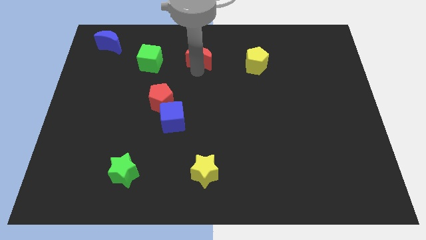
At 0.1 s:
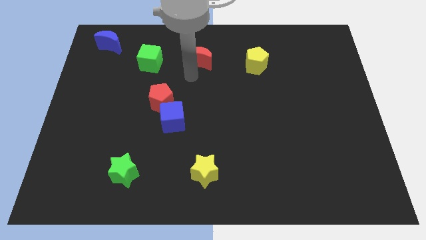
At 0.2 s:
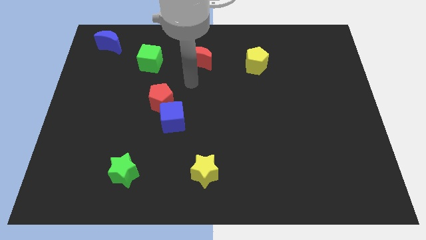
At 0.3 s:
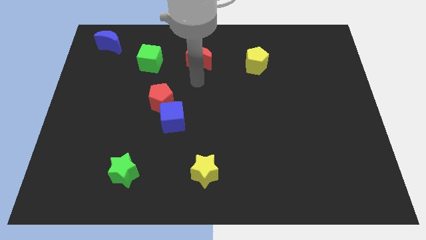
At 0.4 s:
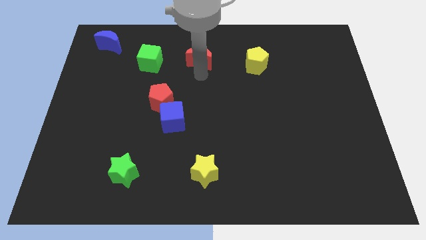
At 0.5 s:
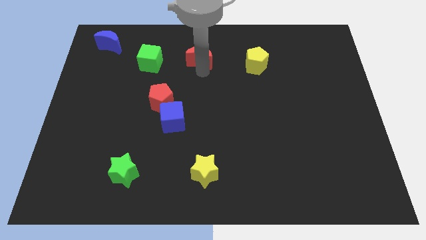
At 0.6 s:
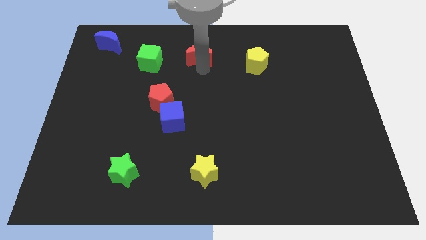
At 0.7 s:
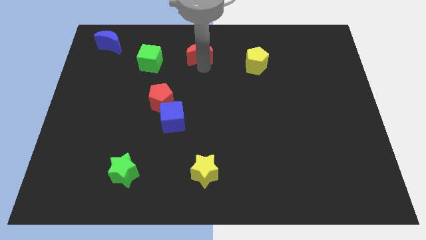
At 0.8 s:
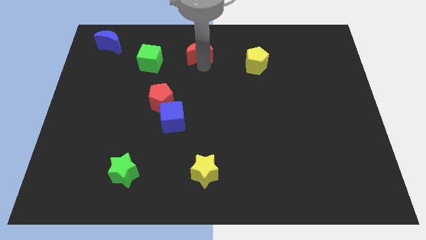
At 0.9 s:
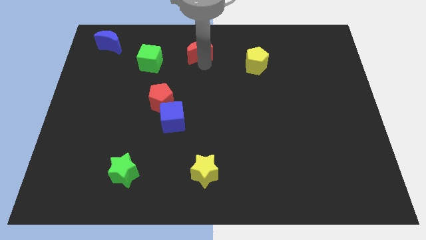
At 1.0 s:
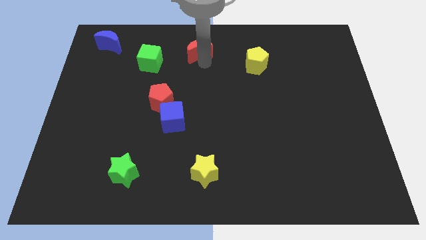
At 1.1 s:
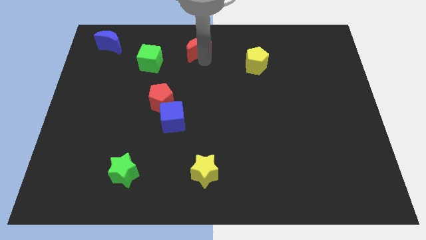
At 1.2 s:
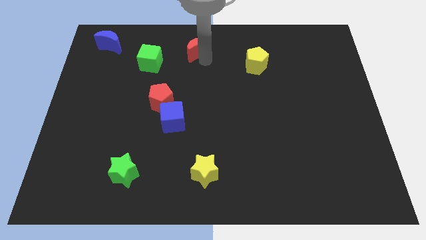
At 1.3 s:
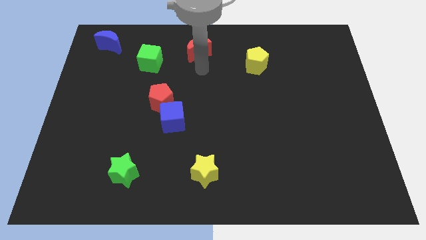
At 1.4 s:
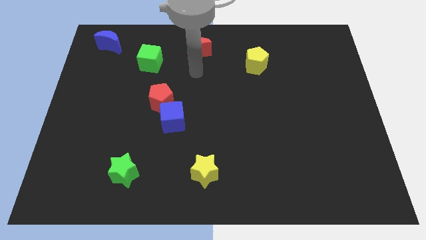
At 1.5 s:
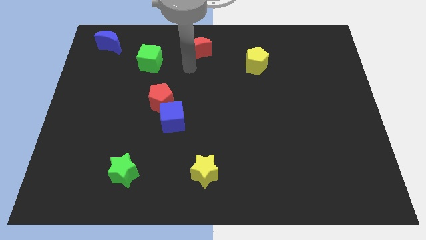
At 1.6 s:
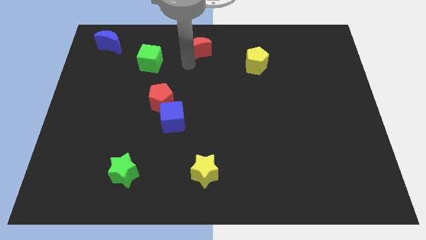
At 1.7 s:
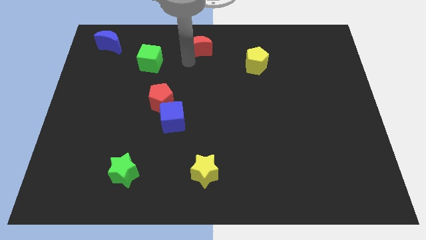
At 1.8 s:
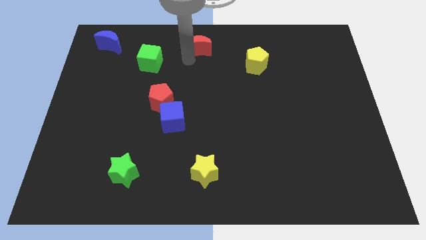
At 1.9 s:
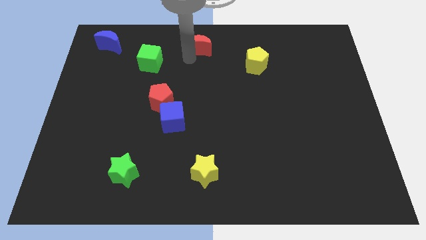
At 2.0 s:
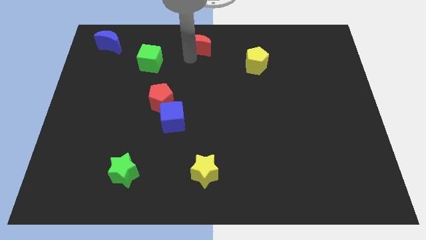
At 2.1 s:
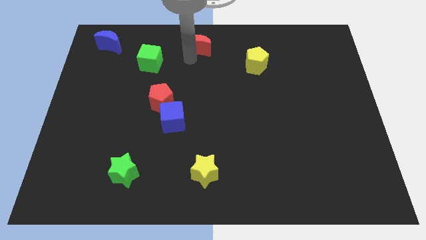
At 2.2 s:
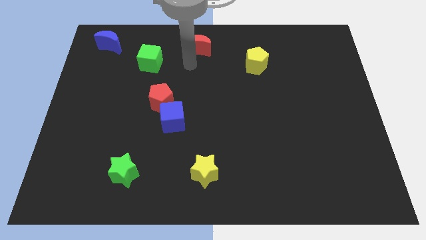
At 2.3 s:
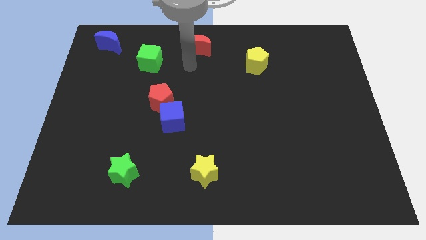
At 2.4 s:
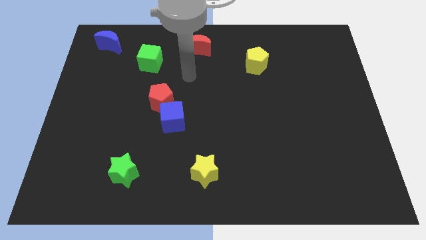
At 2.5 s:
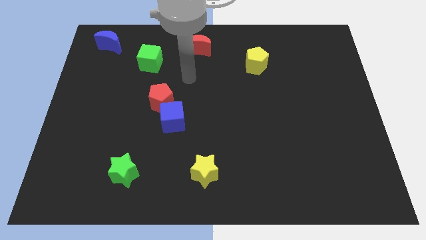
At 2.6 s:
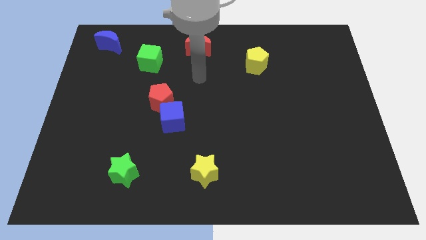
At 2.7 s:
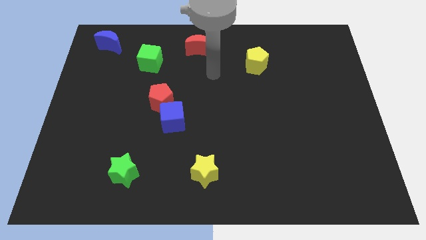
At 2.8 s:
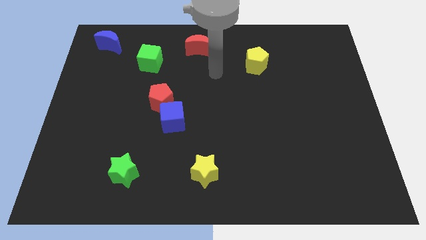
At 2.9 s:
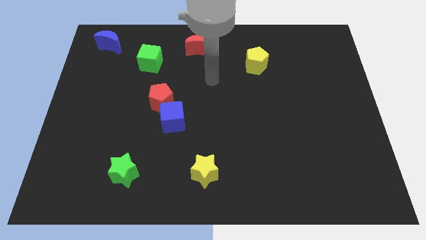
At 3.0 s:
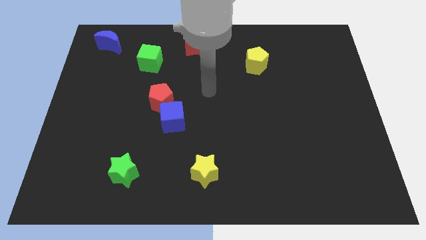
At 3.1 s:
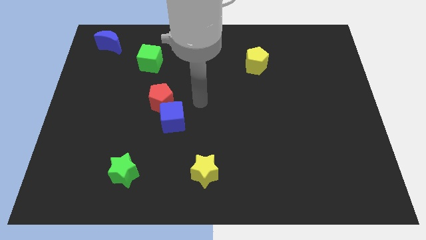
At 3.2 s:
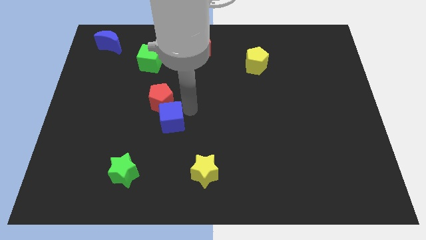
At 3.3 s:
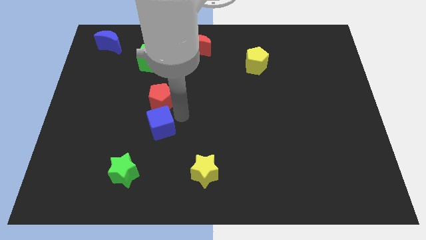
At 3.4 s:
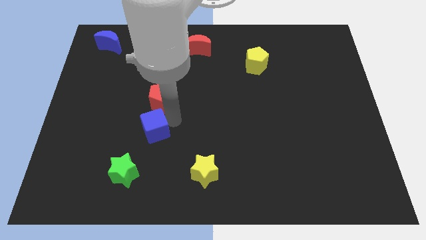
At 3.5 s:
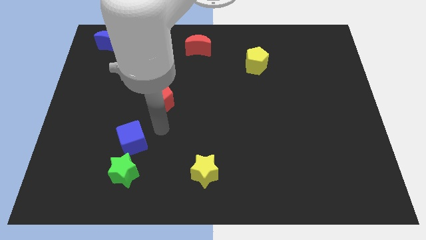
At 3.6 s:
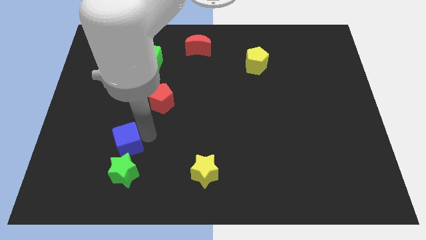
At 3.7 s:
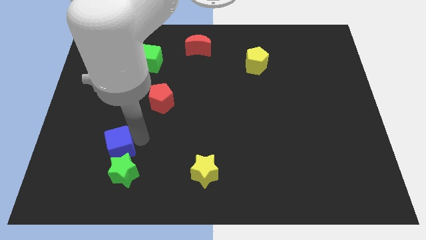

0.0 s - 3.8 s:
move the red crescent to the top center of the board

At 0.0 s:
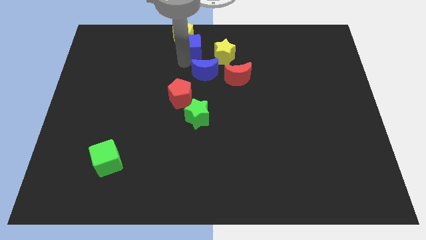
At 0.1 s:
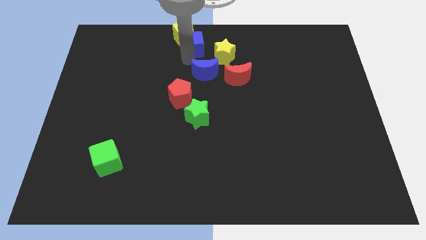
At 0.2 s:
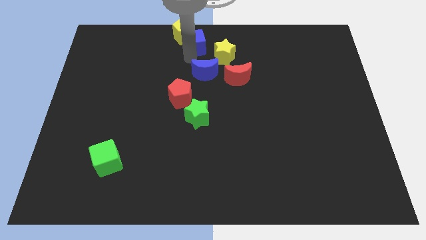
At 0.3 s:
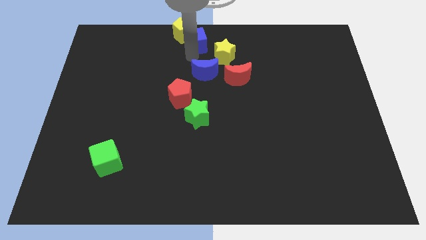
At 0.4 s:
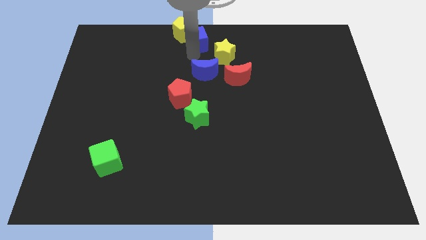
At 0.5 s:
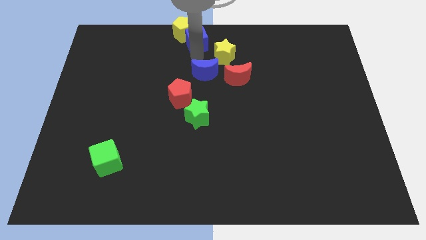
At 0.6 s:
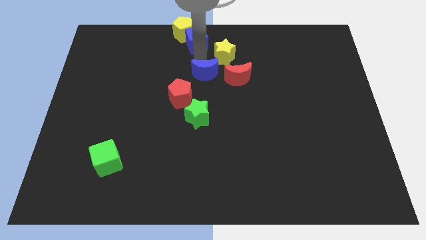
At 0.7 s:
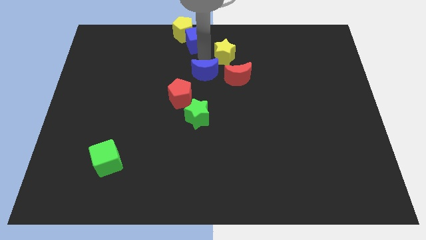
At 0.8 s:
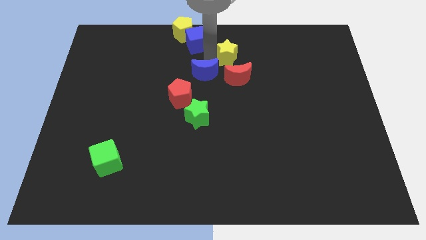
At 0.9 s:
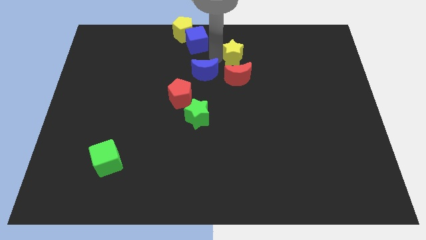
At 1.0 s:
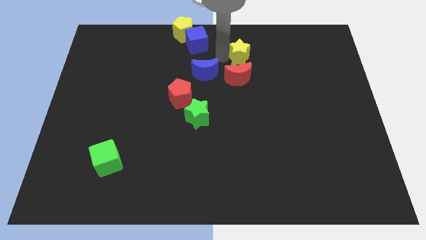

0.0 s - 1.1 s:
push the yellow star slightly to the right

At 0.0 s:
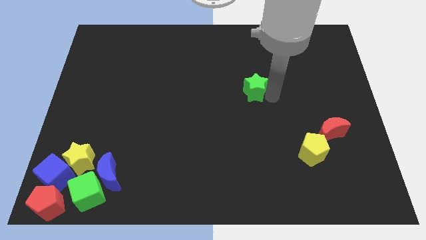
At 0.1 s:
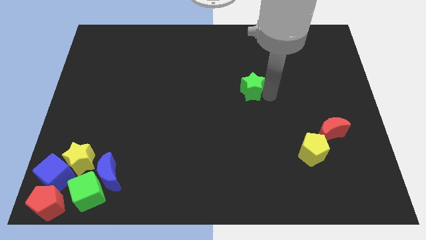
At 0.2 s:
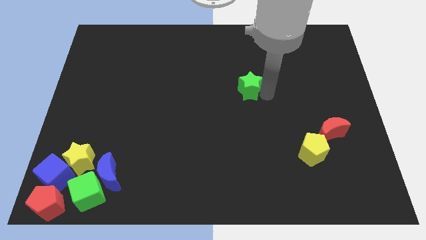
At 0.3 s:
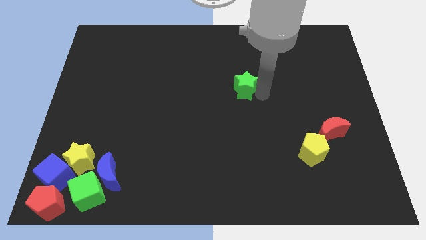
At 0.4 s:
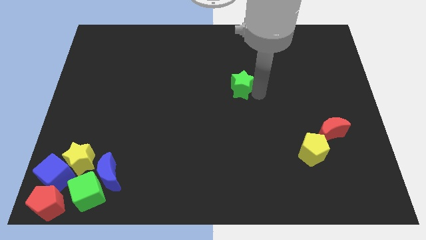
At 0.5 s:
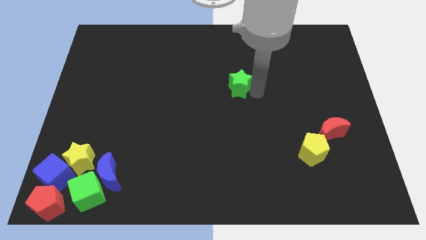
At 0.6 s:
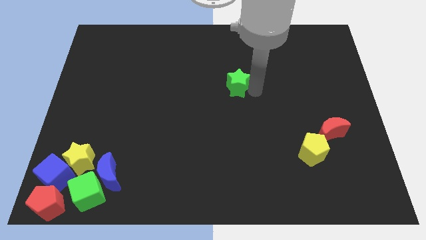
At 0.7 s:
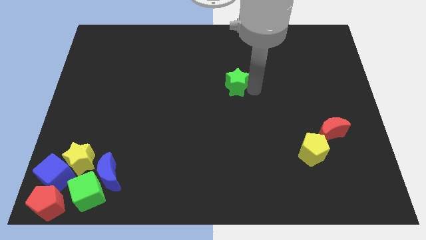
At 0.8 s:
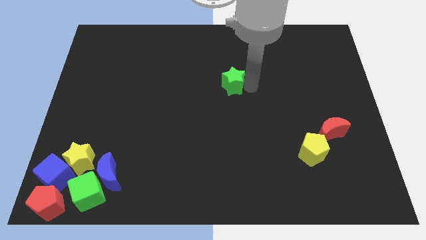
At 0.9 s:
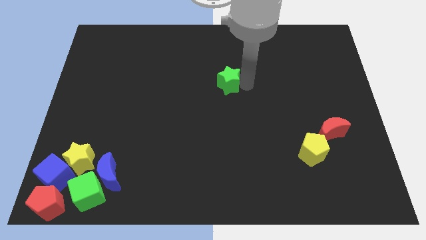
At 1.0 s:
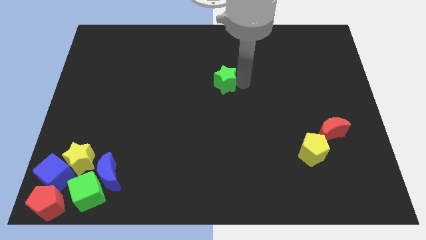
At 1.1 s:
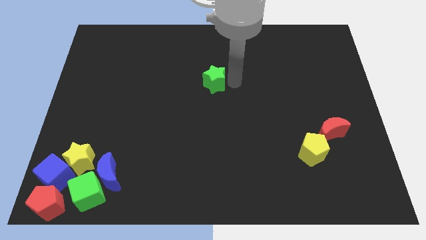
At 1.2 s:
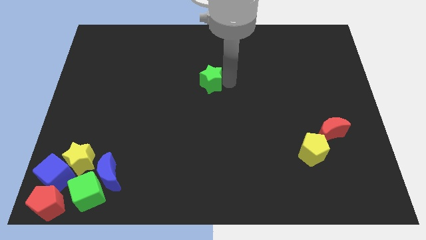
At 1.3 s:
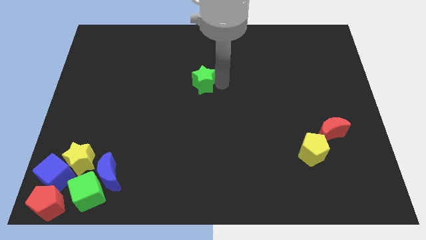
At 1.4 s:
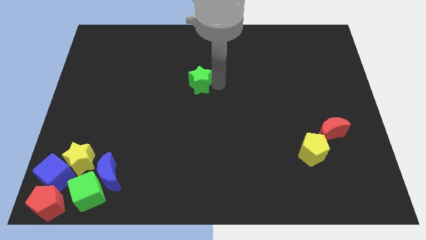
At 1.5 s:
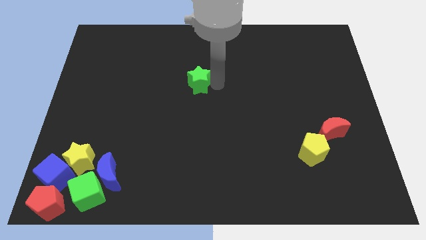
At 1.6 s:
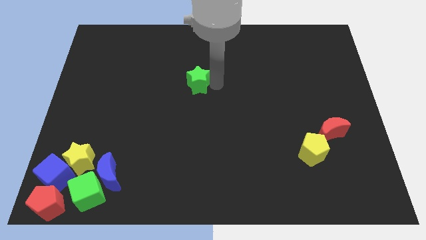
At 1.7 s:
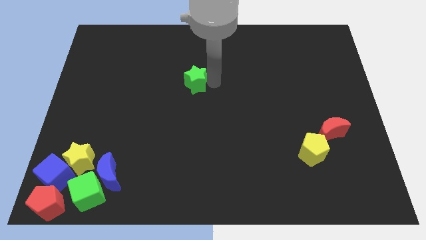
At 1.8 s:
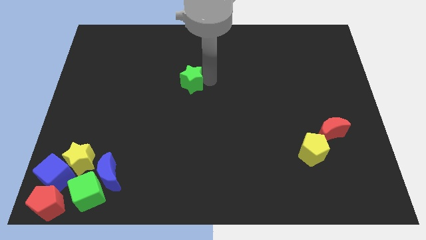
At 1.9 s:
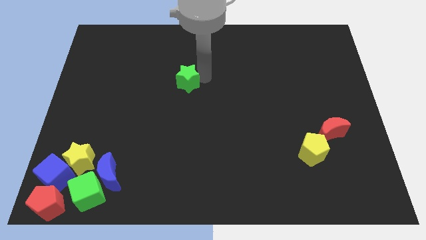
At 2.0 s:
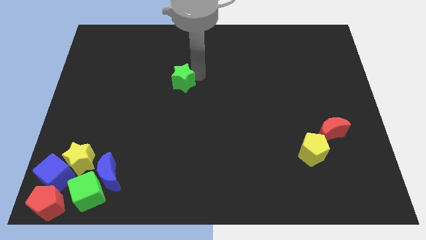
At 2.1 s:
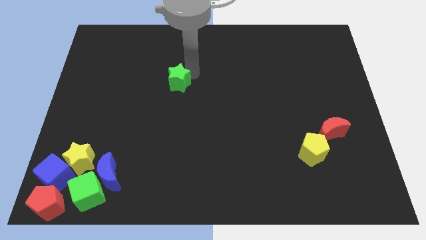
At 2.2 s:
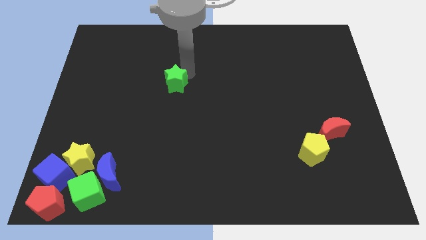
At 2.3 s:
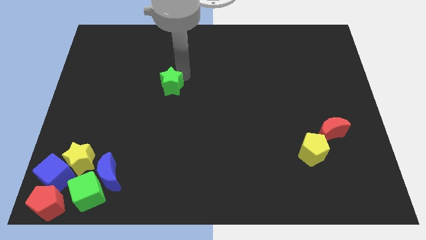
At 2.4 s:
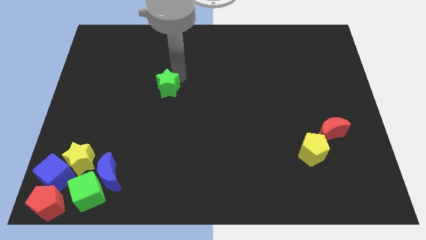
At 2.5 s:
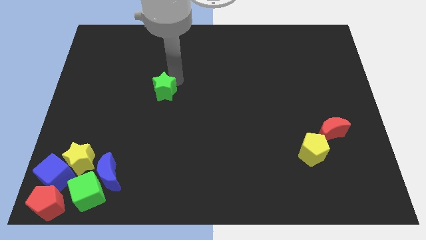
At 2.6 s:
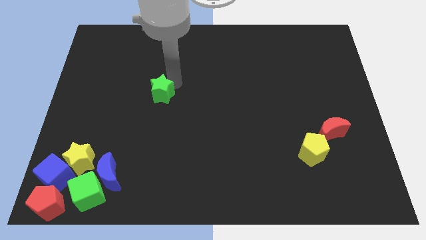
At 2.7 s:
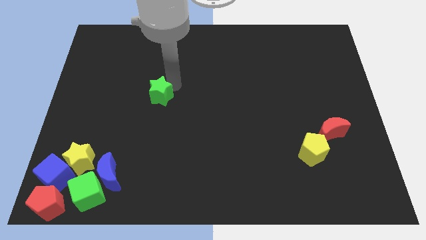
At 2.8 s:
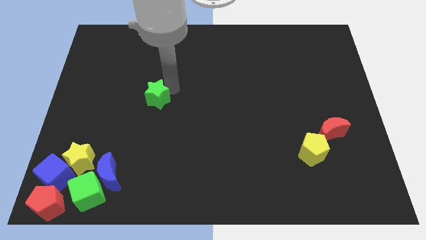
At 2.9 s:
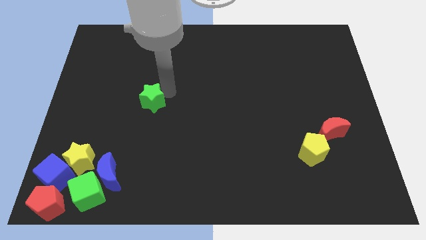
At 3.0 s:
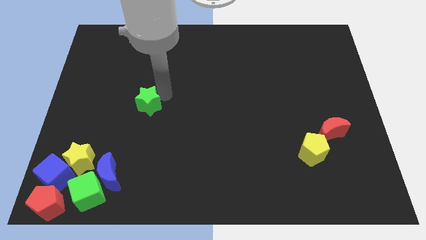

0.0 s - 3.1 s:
slide the green star to the left

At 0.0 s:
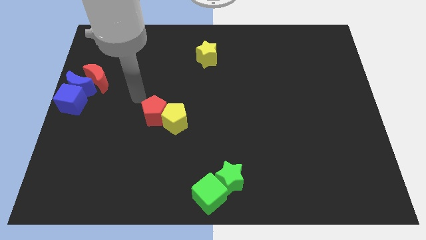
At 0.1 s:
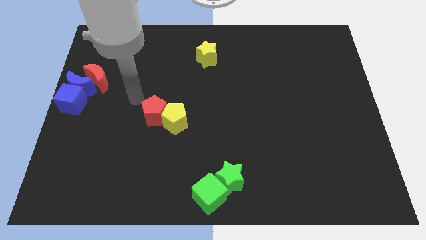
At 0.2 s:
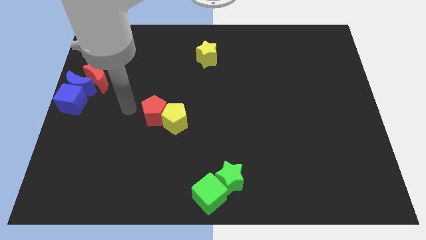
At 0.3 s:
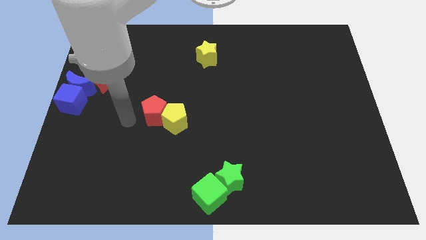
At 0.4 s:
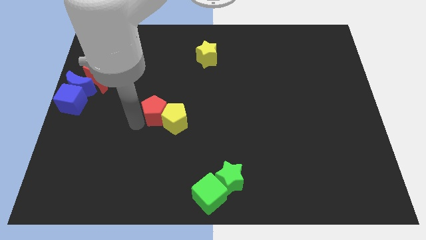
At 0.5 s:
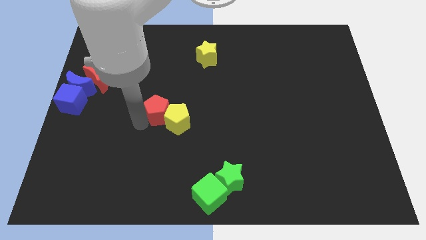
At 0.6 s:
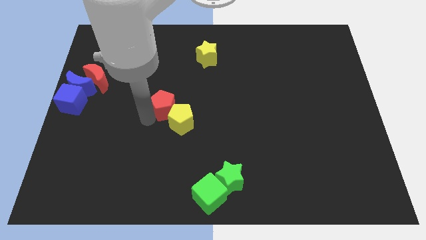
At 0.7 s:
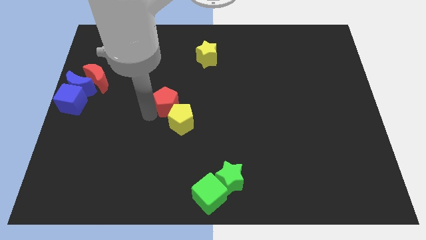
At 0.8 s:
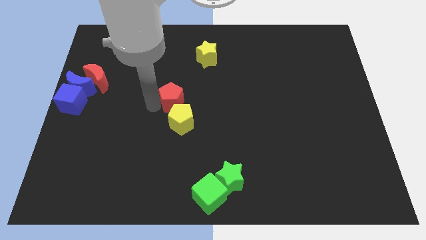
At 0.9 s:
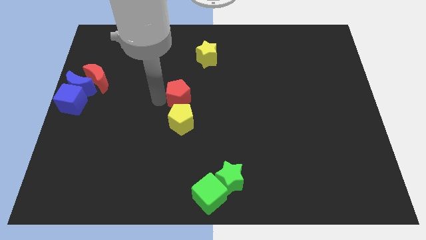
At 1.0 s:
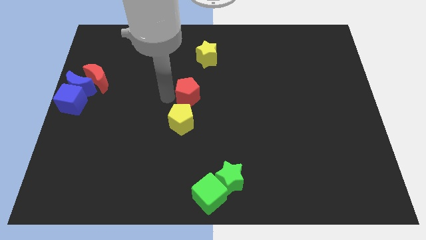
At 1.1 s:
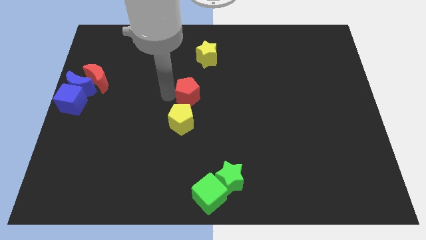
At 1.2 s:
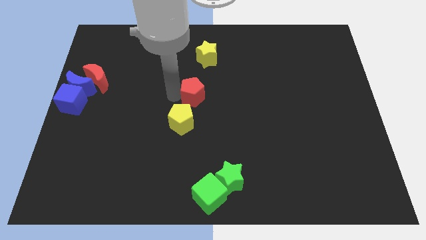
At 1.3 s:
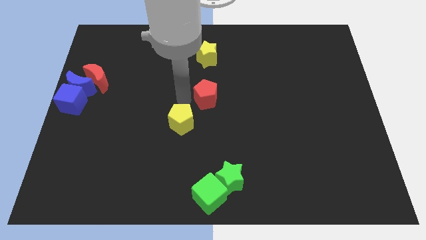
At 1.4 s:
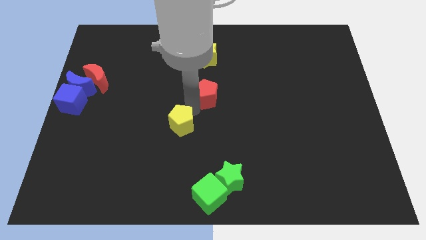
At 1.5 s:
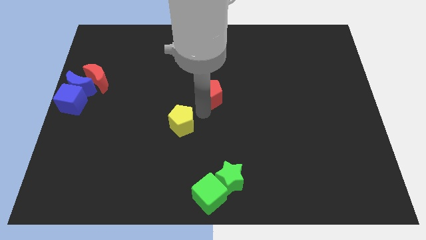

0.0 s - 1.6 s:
push the red pentagon to the bottom side of the yellow star
